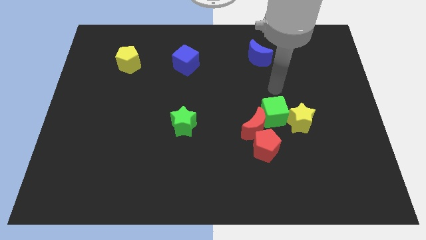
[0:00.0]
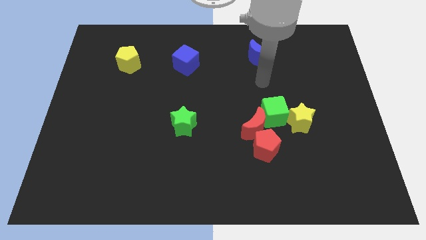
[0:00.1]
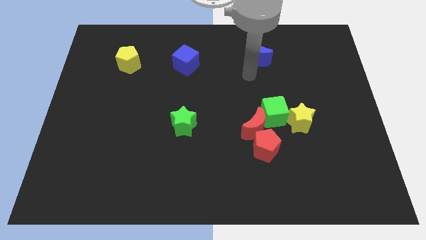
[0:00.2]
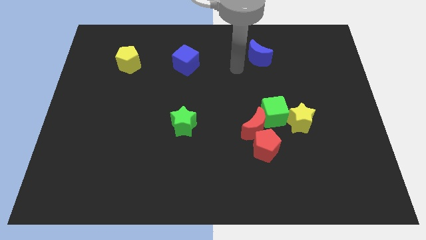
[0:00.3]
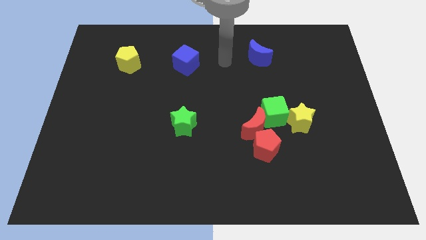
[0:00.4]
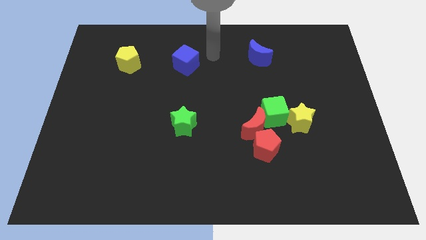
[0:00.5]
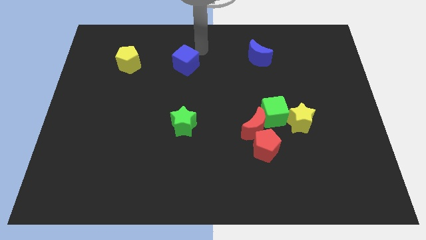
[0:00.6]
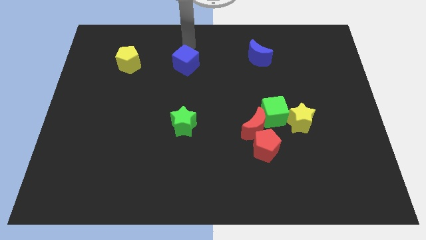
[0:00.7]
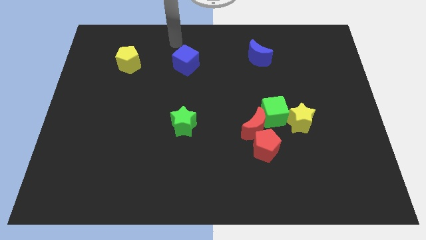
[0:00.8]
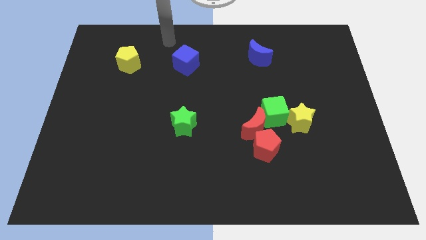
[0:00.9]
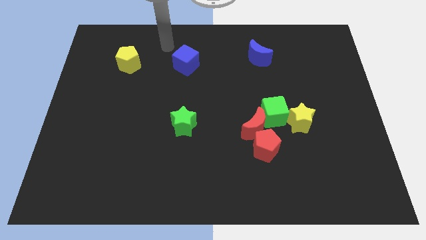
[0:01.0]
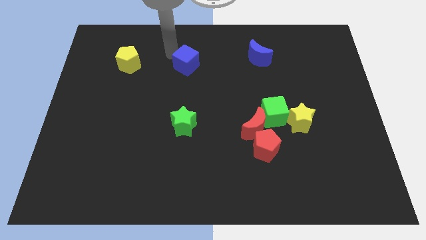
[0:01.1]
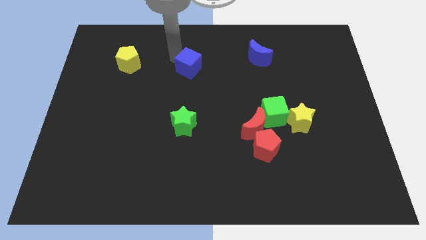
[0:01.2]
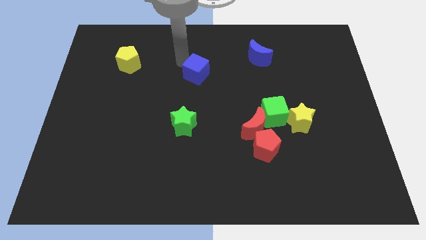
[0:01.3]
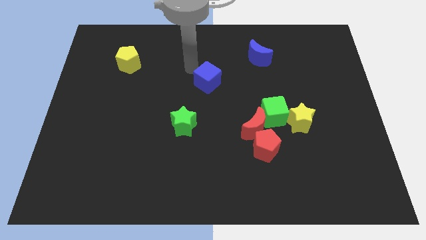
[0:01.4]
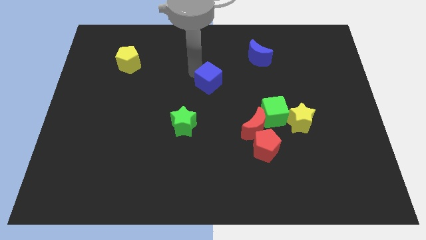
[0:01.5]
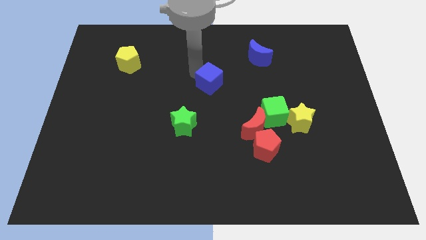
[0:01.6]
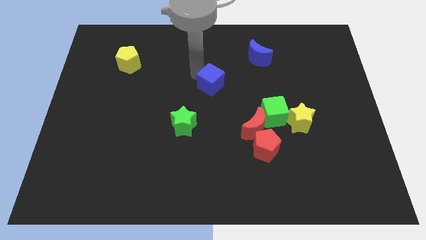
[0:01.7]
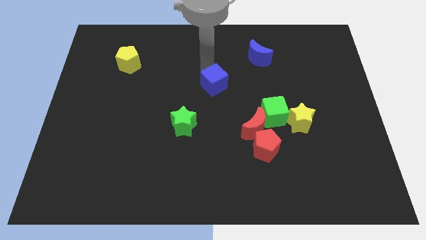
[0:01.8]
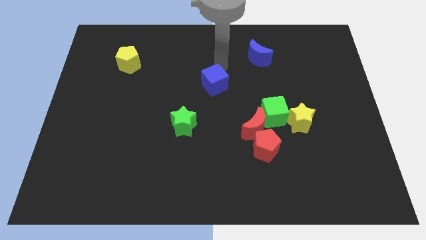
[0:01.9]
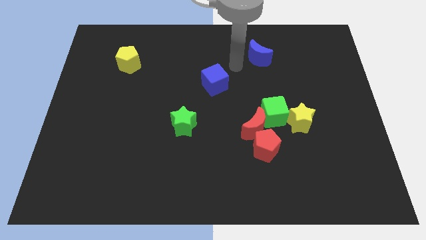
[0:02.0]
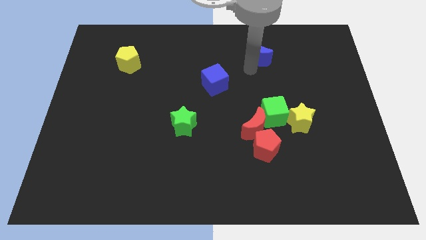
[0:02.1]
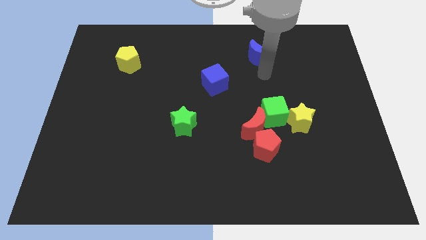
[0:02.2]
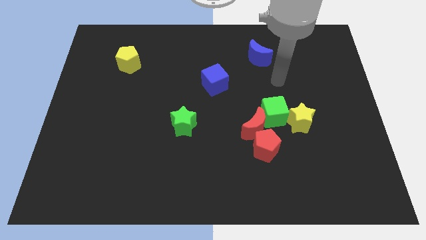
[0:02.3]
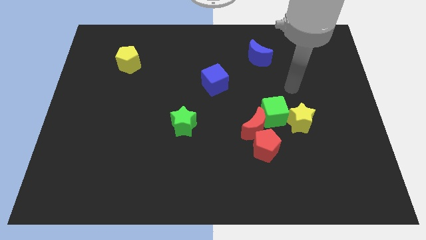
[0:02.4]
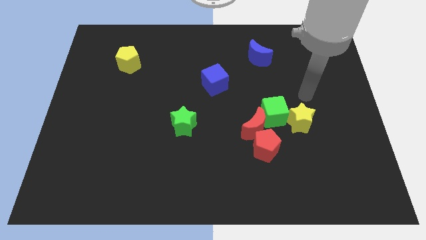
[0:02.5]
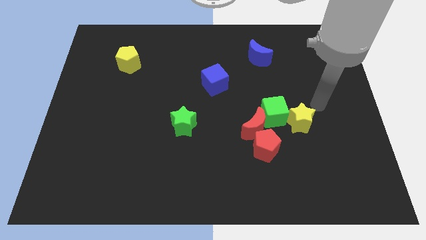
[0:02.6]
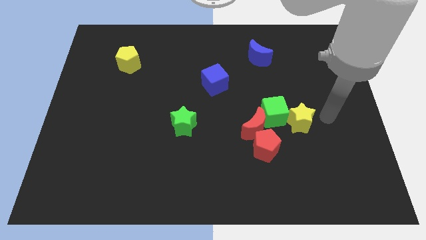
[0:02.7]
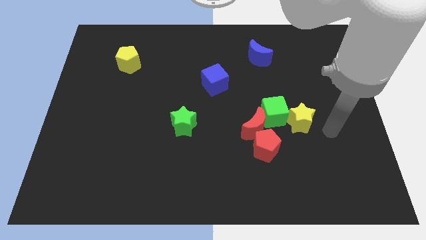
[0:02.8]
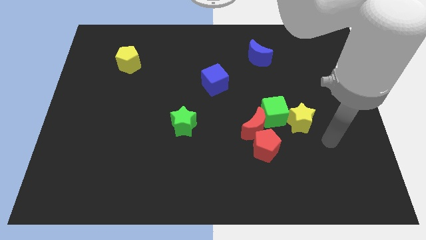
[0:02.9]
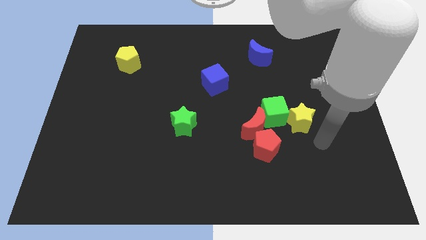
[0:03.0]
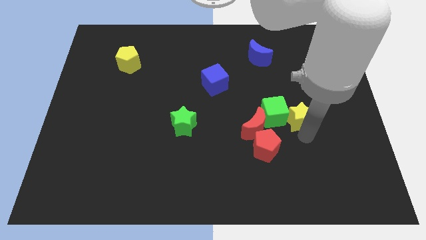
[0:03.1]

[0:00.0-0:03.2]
place the green cube diagonal to the blue moon

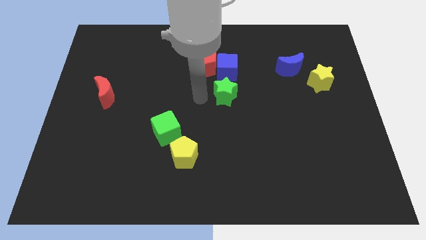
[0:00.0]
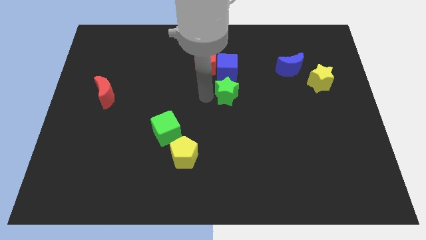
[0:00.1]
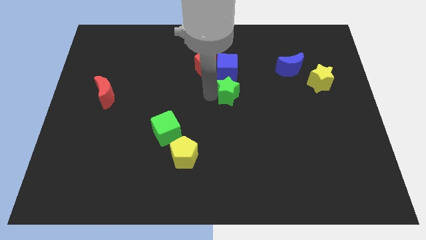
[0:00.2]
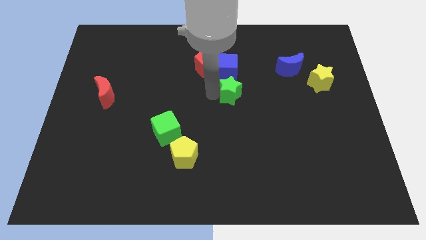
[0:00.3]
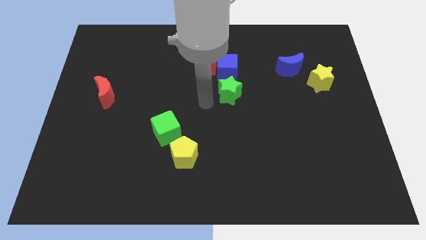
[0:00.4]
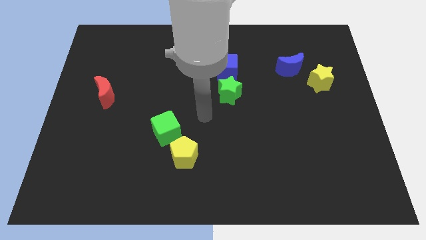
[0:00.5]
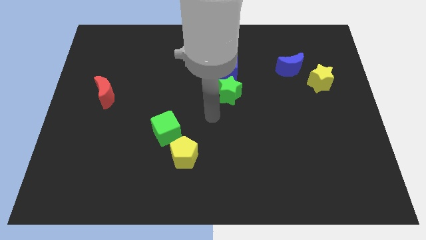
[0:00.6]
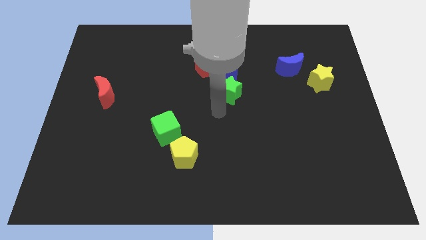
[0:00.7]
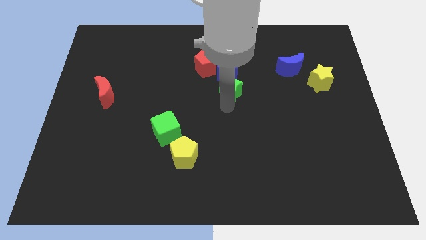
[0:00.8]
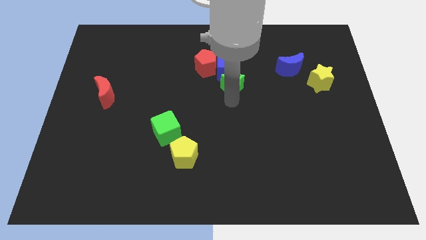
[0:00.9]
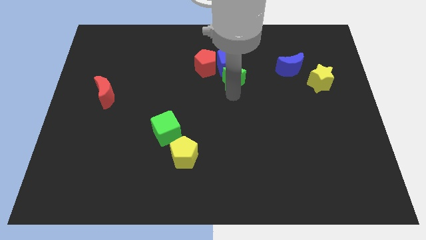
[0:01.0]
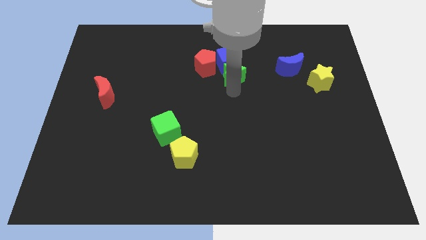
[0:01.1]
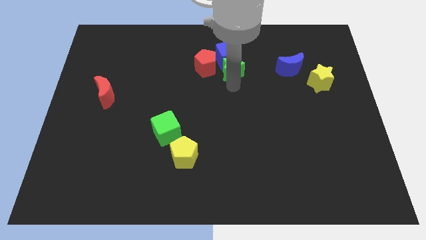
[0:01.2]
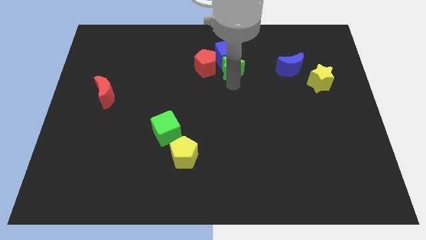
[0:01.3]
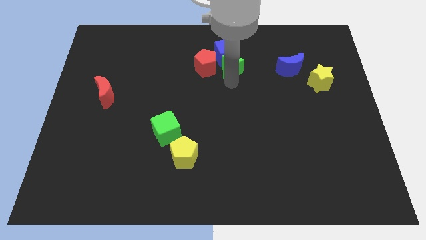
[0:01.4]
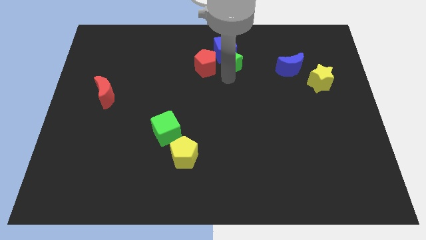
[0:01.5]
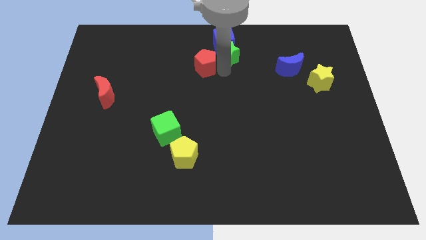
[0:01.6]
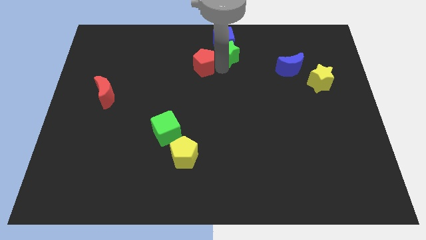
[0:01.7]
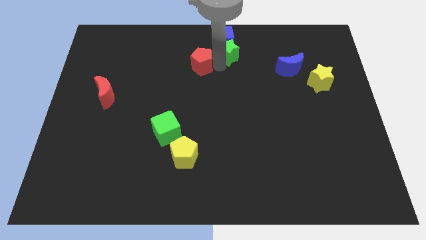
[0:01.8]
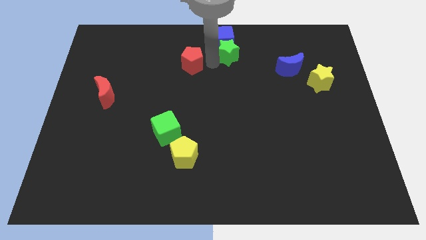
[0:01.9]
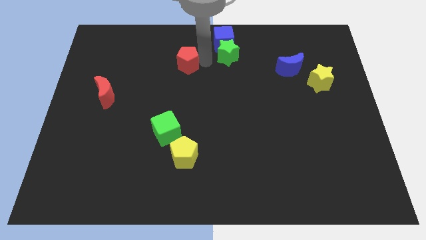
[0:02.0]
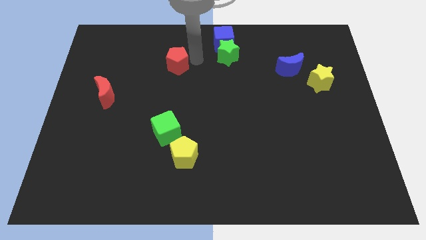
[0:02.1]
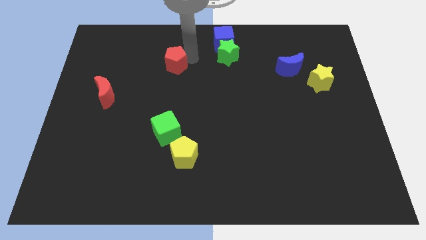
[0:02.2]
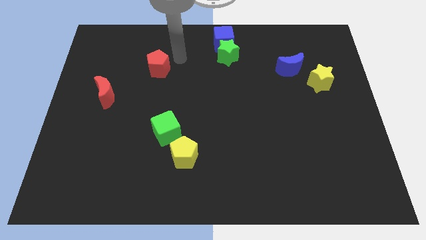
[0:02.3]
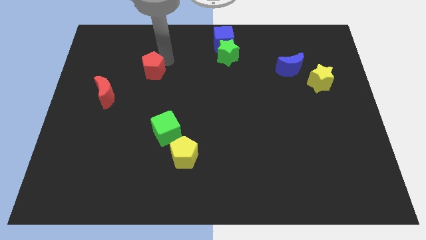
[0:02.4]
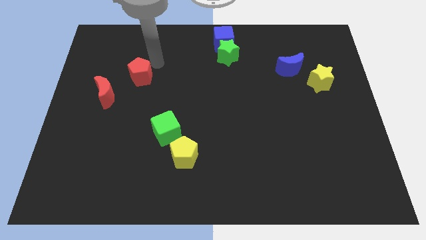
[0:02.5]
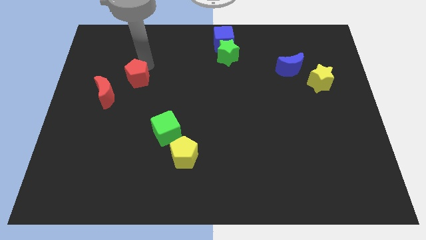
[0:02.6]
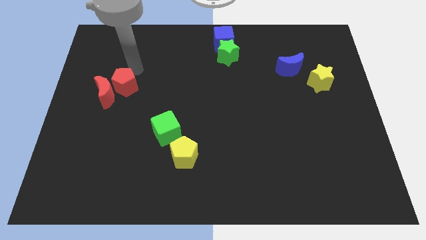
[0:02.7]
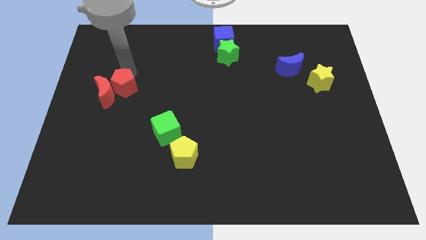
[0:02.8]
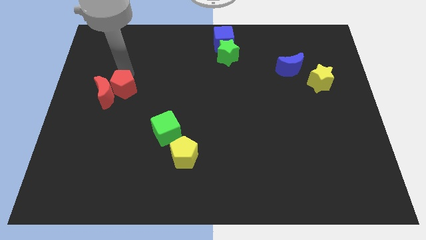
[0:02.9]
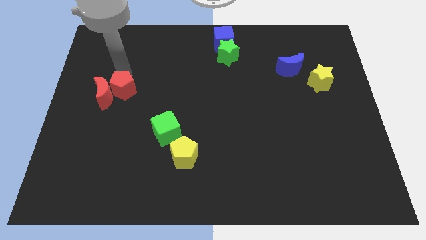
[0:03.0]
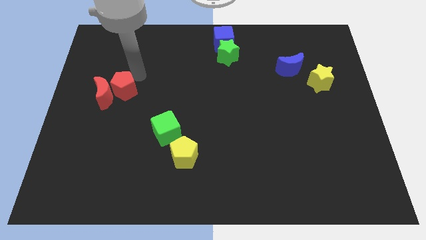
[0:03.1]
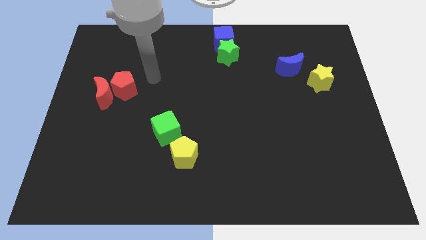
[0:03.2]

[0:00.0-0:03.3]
slightly move the green star and blue cube to the top center of the board

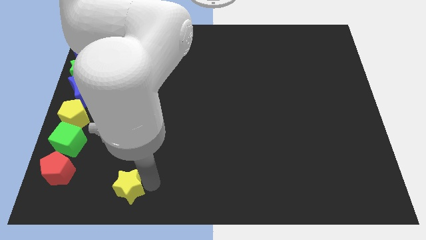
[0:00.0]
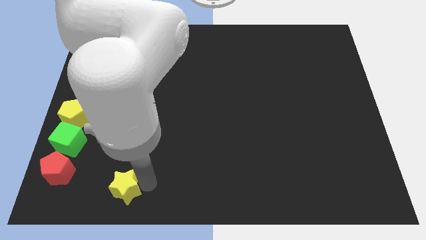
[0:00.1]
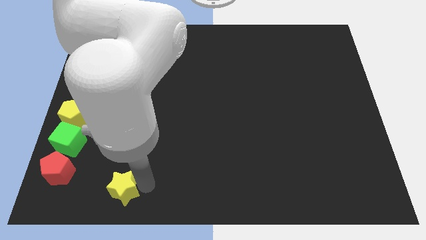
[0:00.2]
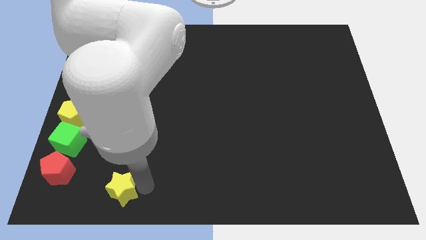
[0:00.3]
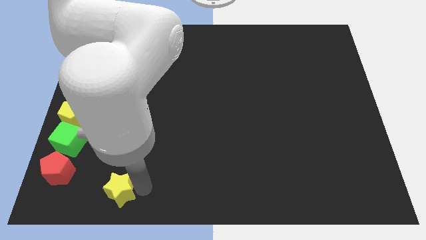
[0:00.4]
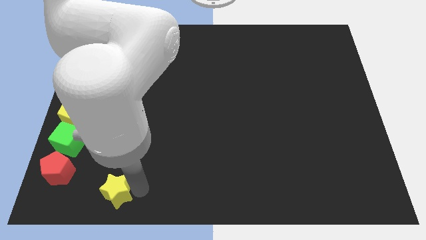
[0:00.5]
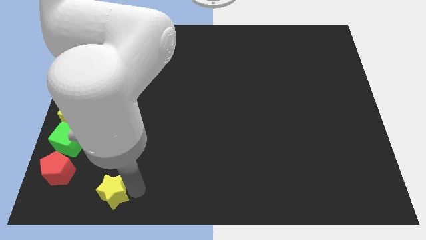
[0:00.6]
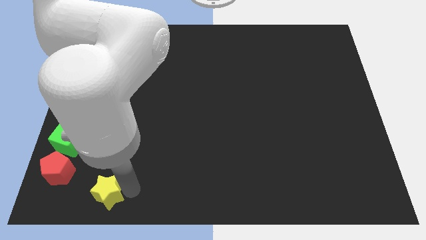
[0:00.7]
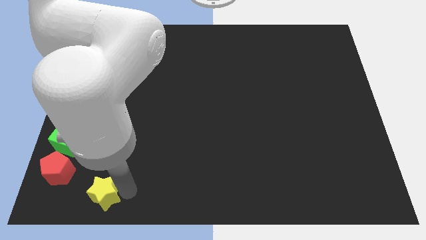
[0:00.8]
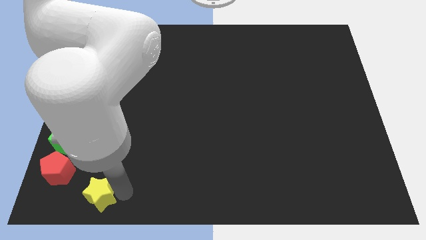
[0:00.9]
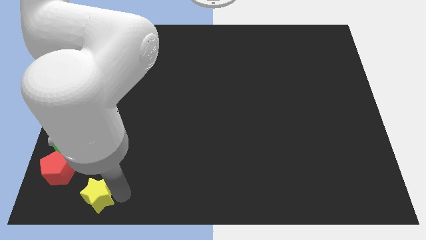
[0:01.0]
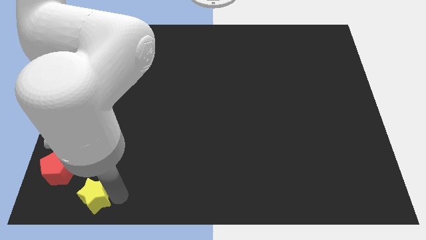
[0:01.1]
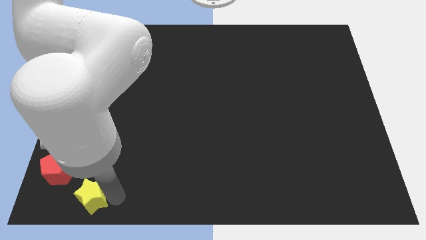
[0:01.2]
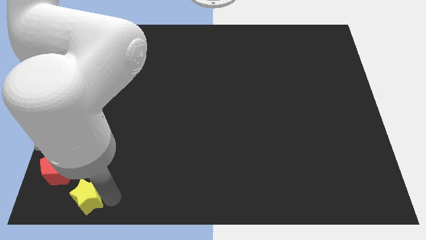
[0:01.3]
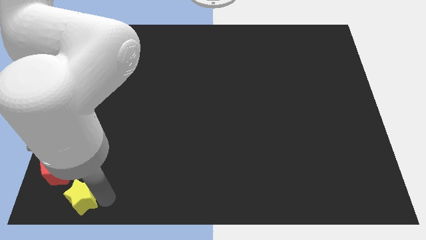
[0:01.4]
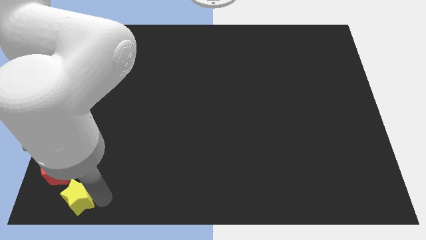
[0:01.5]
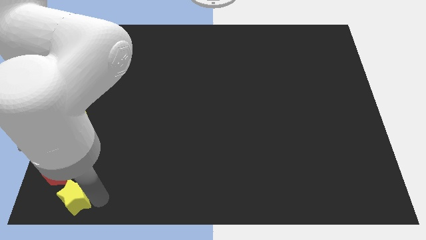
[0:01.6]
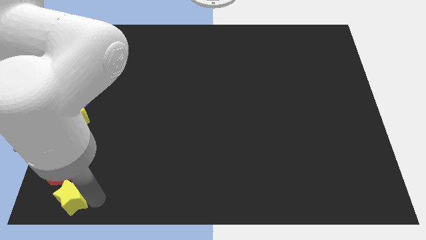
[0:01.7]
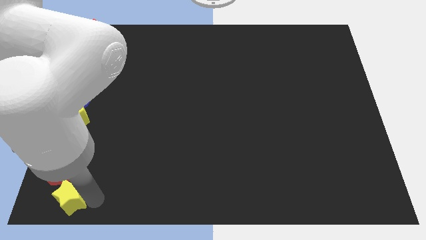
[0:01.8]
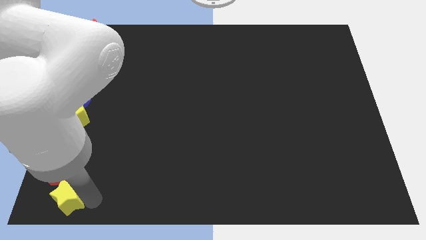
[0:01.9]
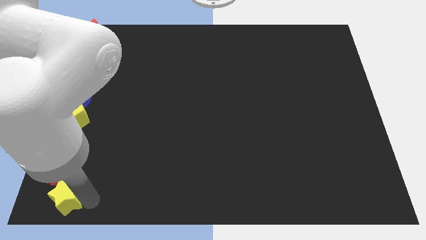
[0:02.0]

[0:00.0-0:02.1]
push yellow star towards the bottom left corner of the board

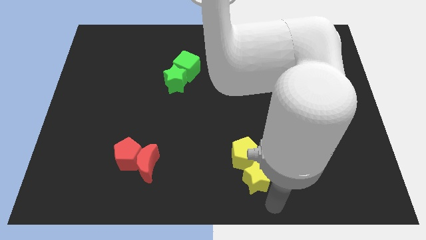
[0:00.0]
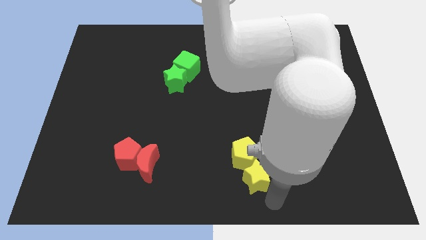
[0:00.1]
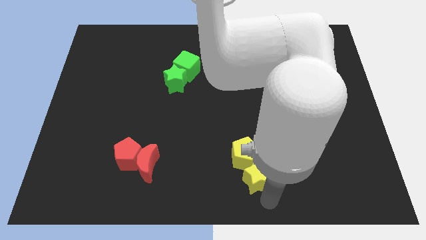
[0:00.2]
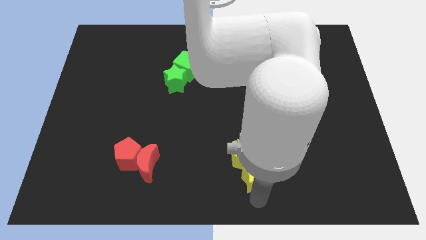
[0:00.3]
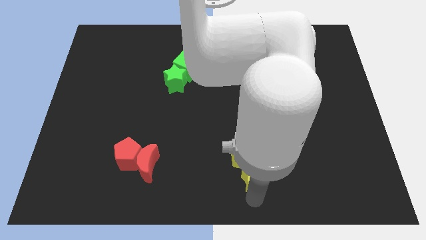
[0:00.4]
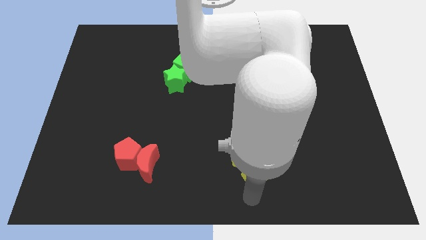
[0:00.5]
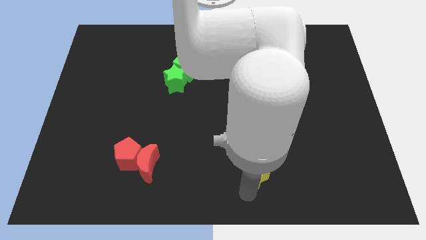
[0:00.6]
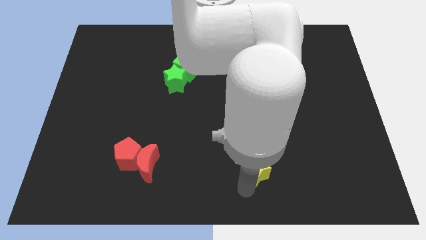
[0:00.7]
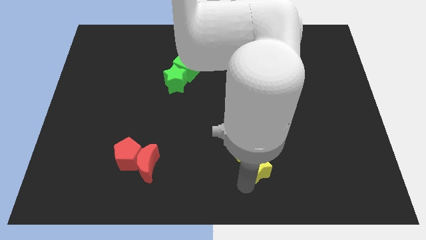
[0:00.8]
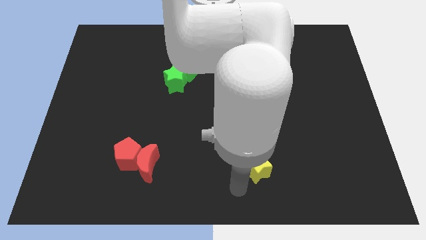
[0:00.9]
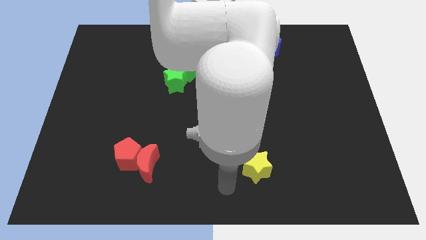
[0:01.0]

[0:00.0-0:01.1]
push the yellow star into the yellow pentagon
